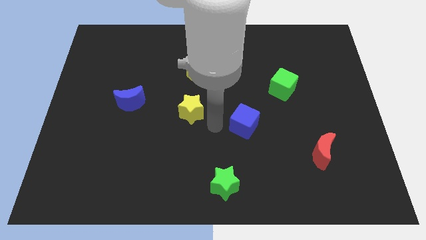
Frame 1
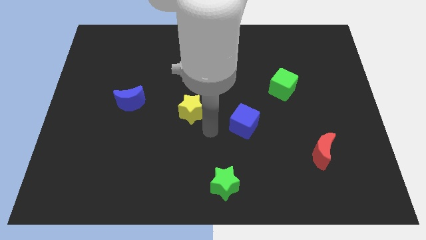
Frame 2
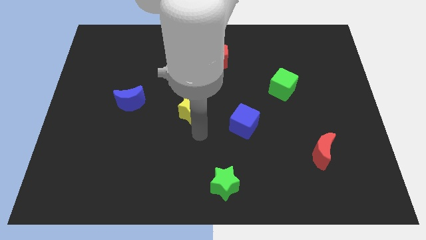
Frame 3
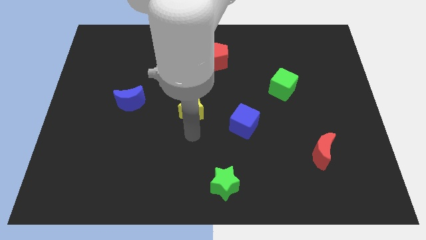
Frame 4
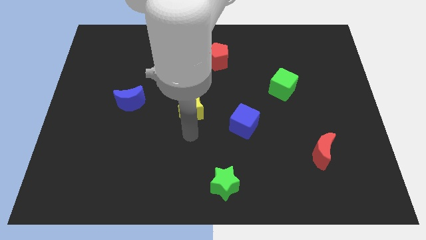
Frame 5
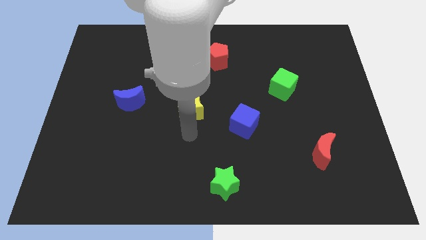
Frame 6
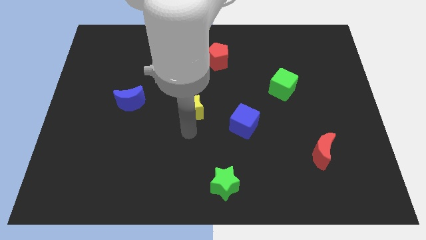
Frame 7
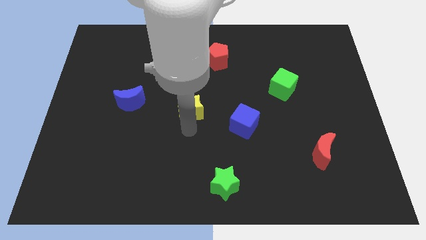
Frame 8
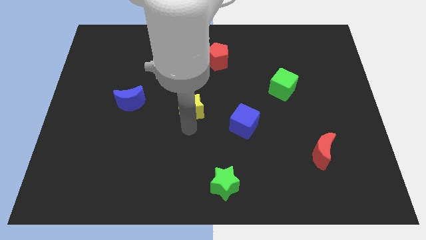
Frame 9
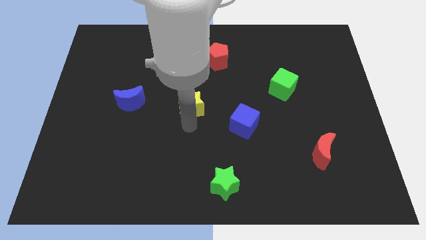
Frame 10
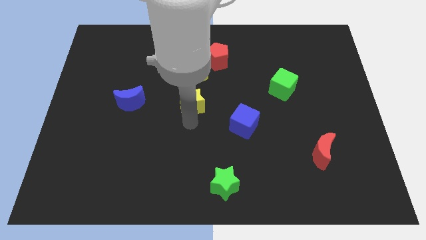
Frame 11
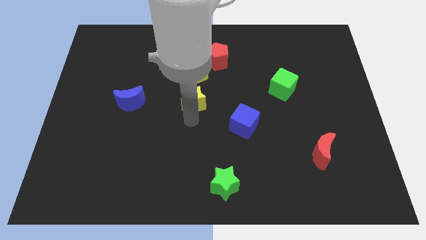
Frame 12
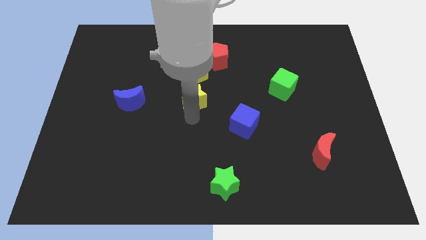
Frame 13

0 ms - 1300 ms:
push the yellow star slightly to the top

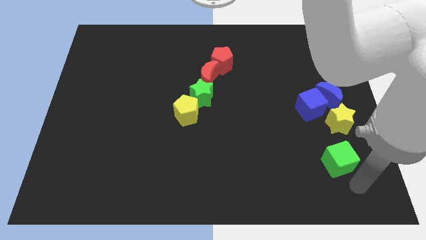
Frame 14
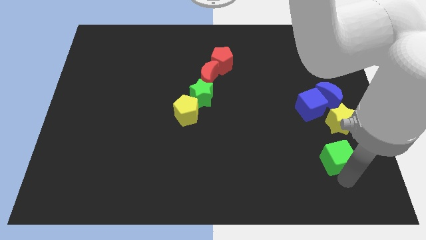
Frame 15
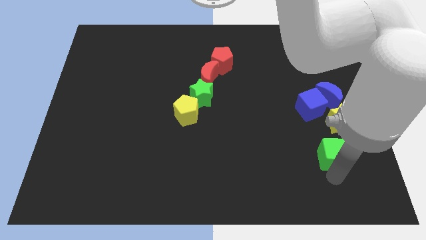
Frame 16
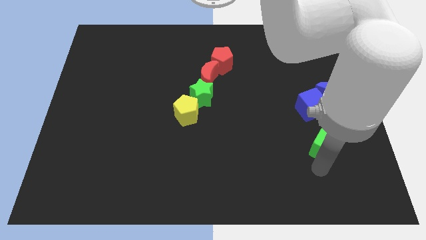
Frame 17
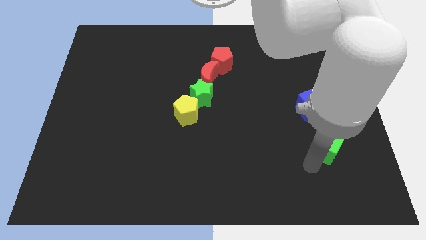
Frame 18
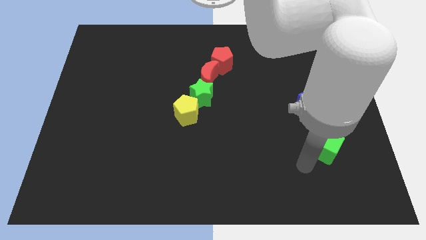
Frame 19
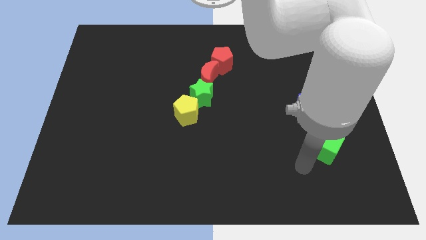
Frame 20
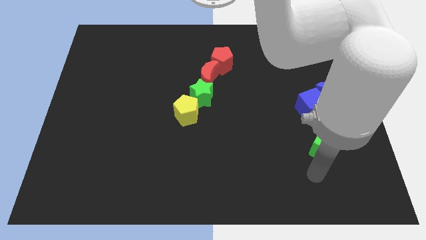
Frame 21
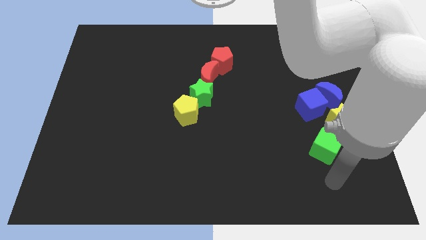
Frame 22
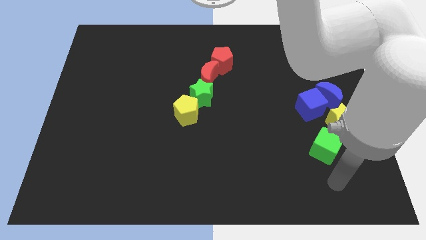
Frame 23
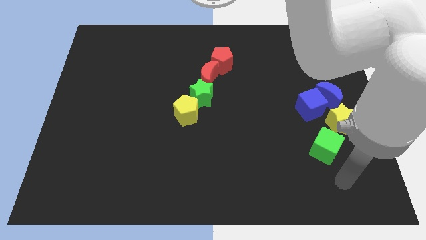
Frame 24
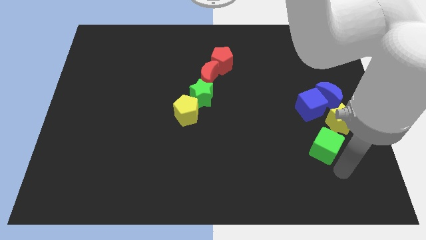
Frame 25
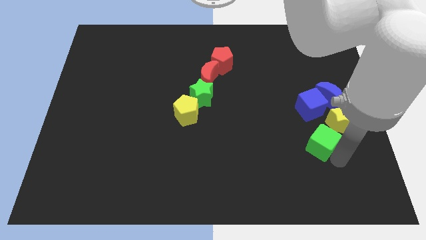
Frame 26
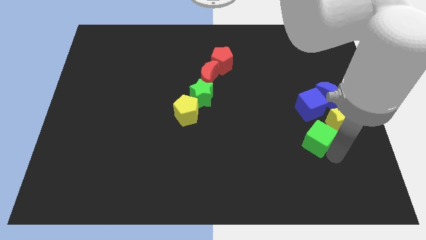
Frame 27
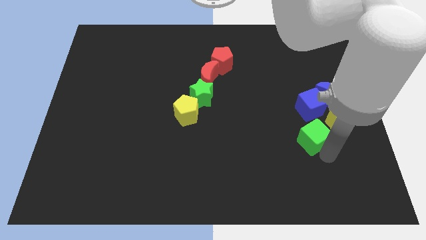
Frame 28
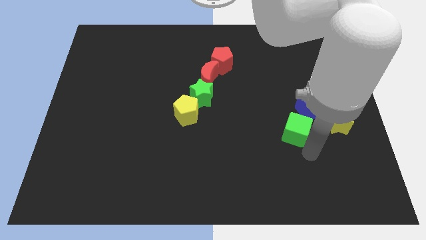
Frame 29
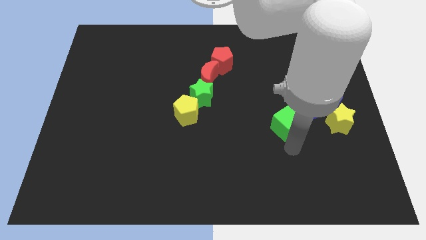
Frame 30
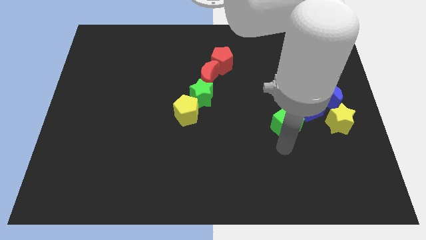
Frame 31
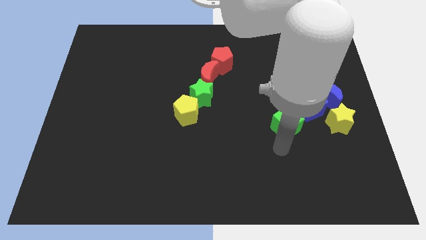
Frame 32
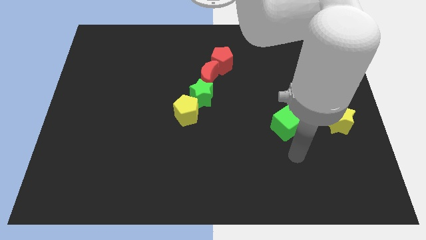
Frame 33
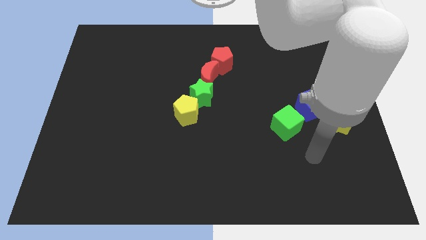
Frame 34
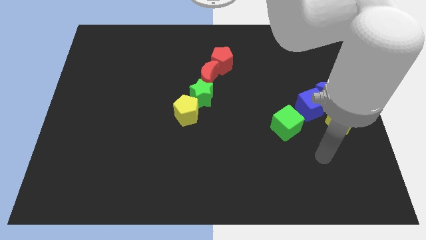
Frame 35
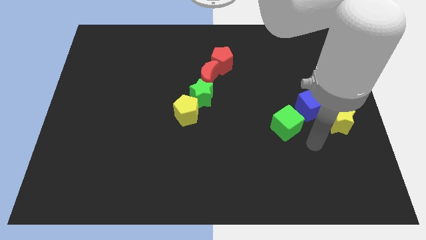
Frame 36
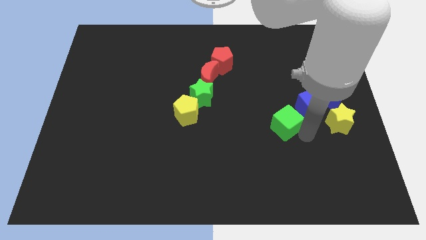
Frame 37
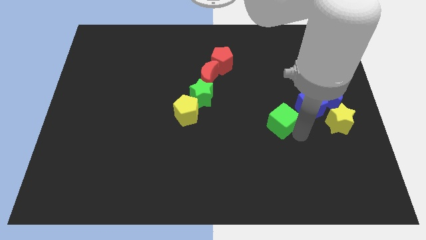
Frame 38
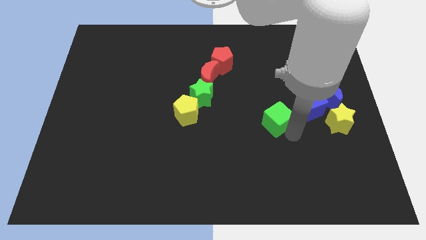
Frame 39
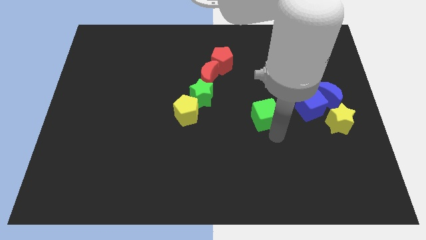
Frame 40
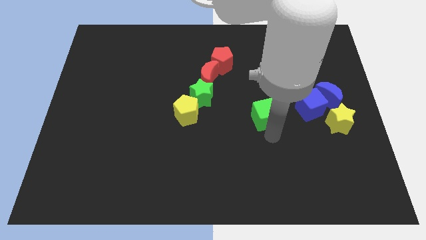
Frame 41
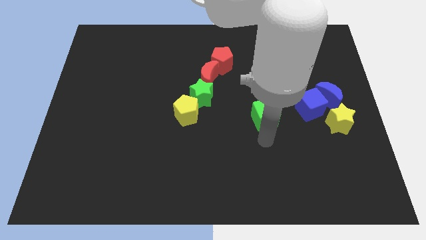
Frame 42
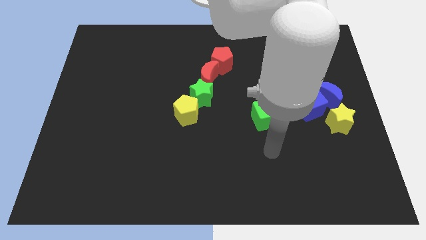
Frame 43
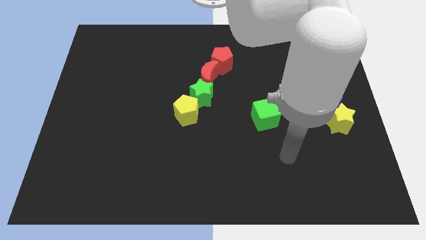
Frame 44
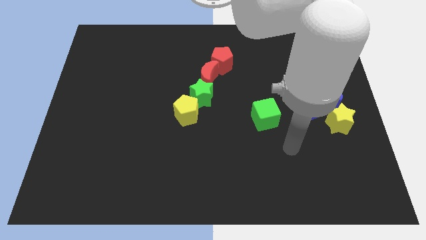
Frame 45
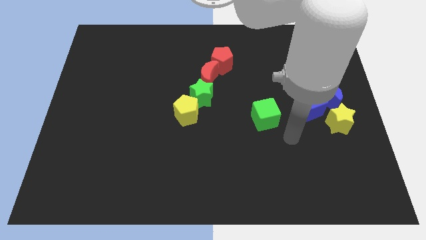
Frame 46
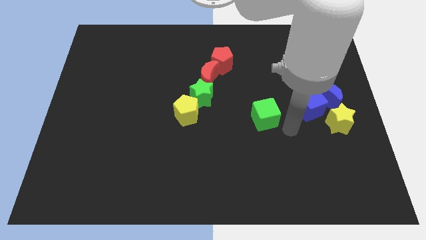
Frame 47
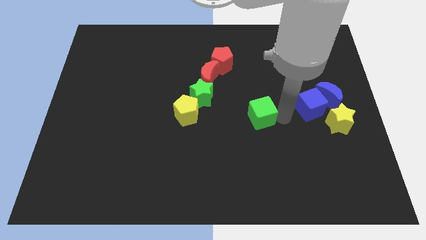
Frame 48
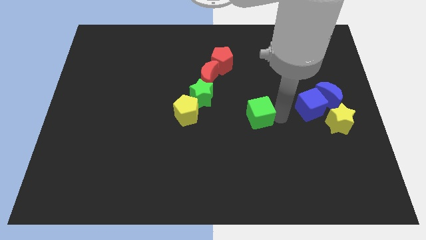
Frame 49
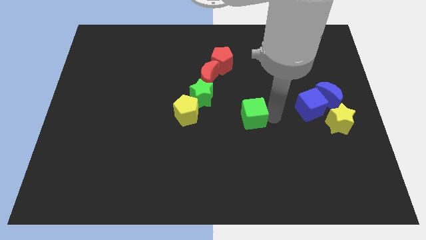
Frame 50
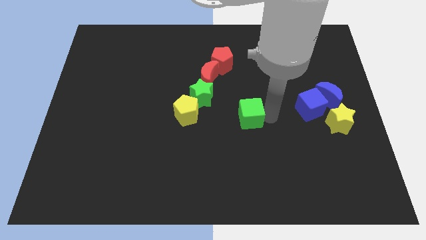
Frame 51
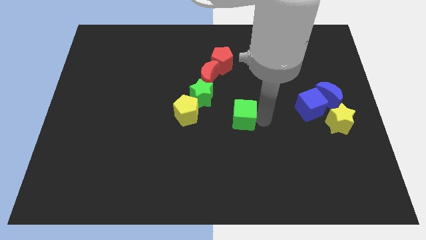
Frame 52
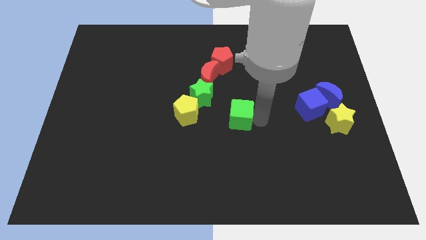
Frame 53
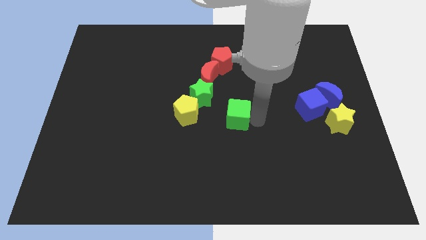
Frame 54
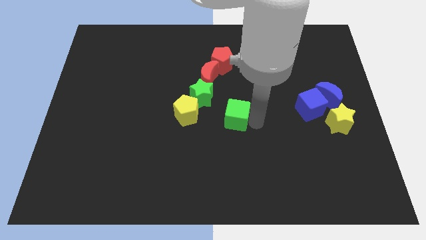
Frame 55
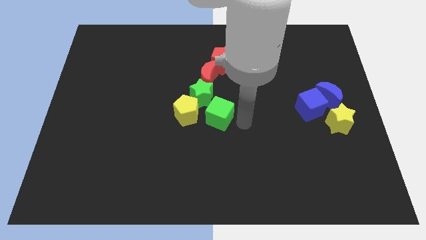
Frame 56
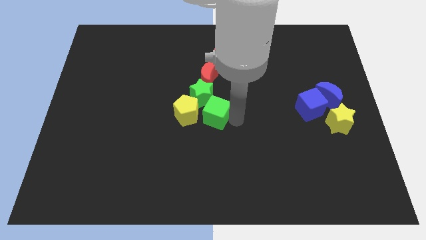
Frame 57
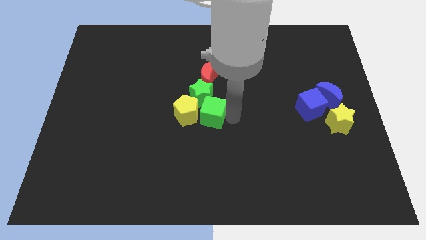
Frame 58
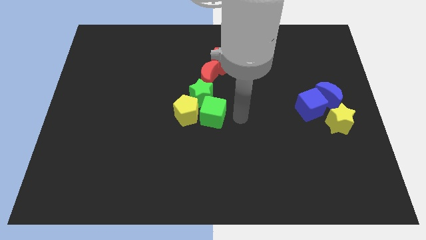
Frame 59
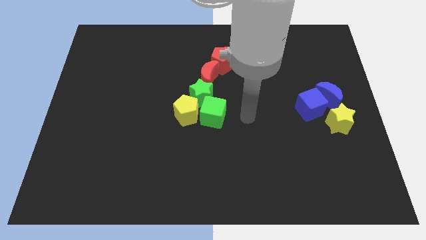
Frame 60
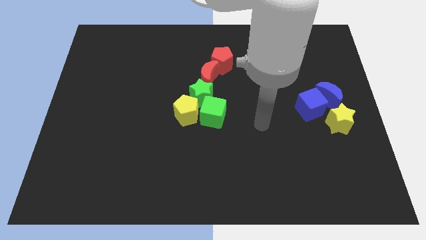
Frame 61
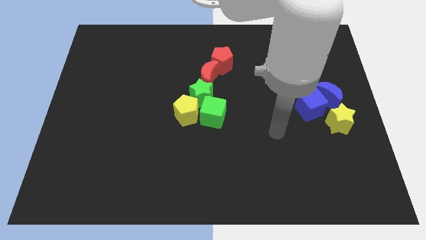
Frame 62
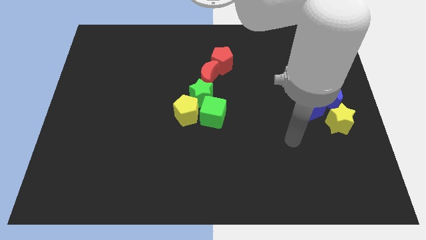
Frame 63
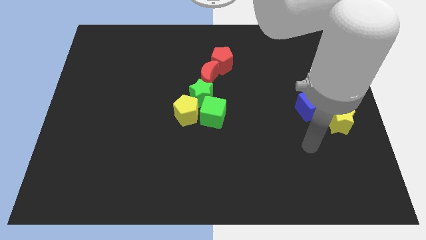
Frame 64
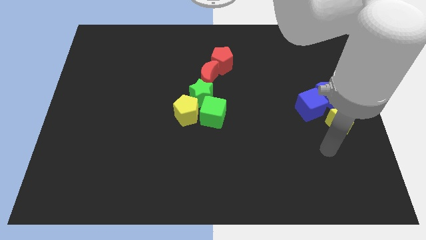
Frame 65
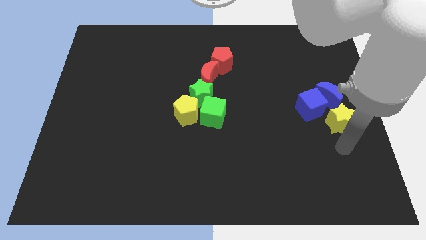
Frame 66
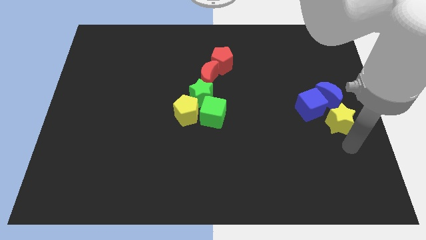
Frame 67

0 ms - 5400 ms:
push the green cube to the right side of the yellow pentagon

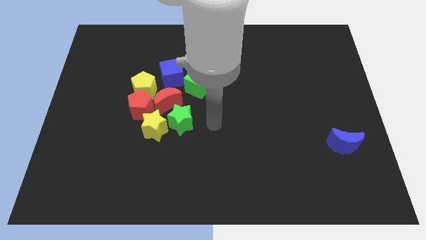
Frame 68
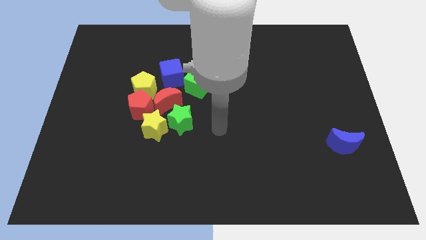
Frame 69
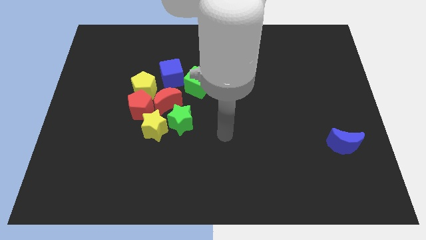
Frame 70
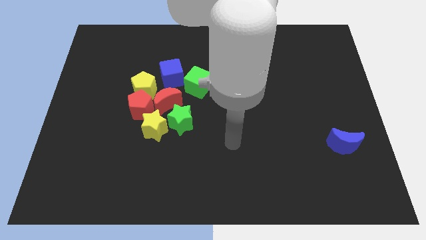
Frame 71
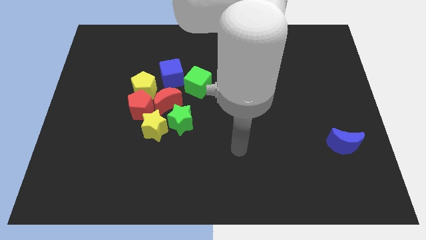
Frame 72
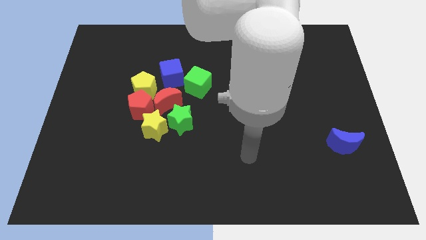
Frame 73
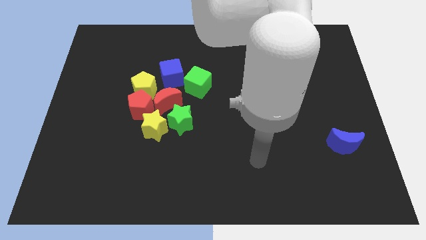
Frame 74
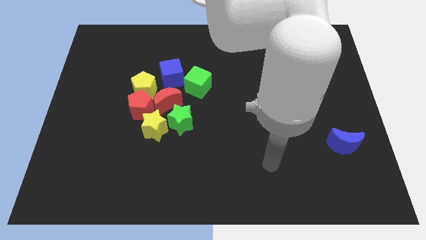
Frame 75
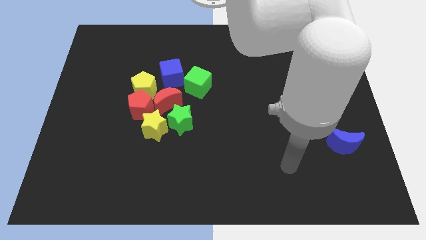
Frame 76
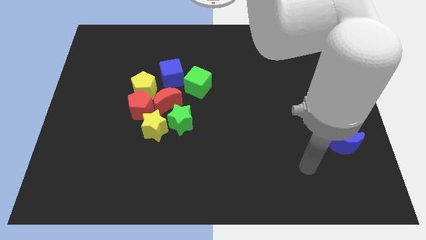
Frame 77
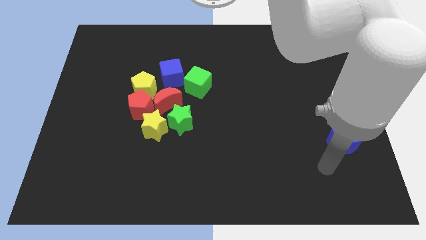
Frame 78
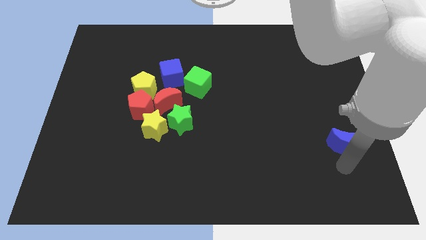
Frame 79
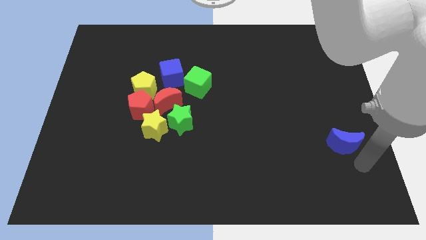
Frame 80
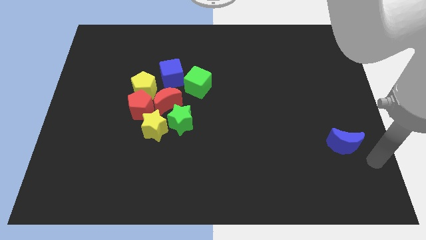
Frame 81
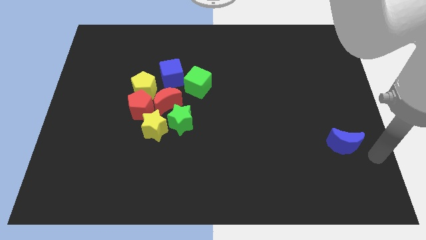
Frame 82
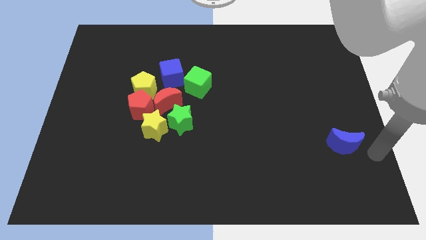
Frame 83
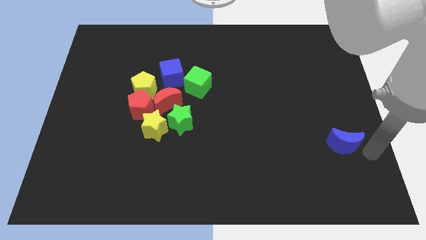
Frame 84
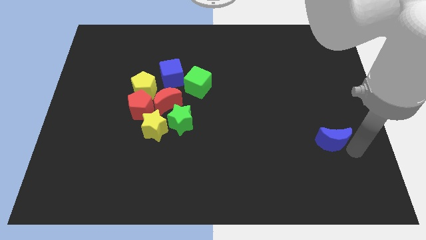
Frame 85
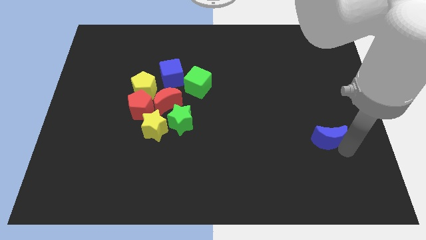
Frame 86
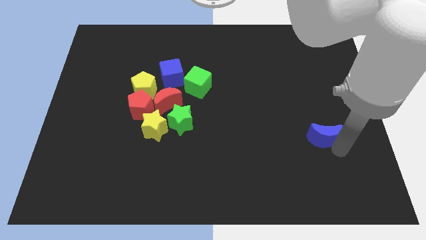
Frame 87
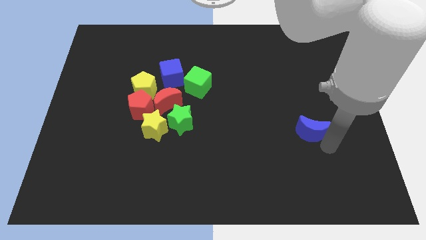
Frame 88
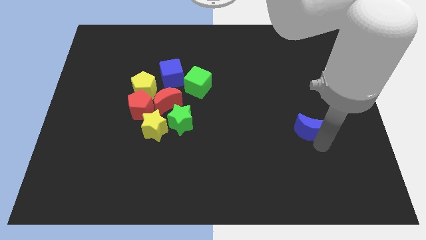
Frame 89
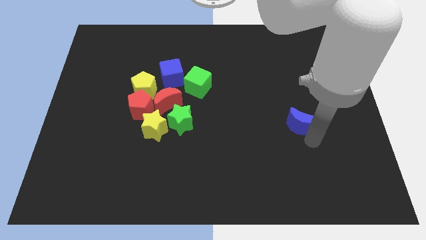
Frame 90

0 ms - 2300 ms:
push the blue crescent towards green star
